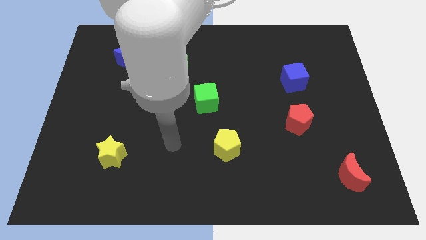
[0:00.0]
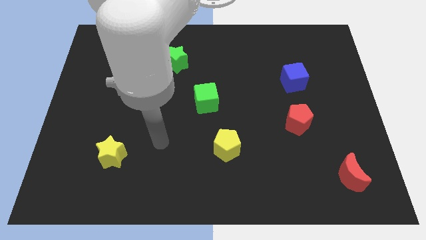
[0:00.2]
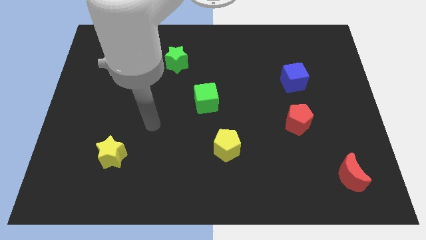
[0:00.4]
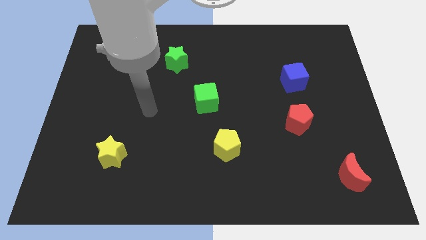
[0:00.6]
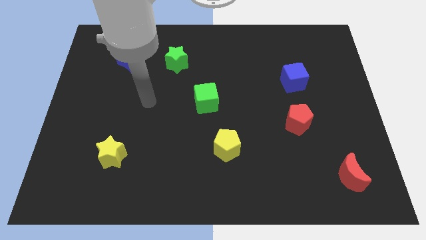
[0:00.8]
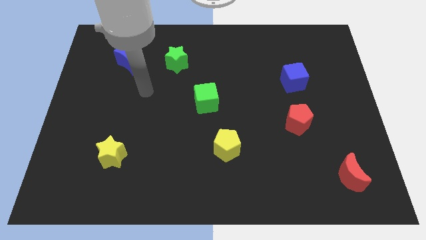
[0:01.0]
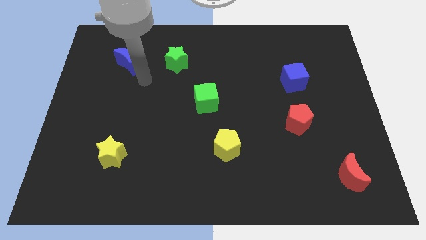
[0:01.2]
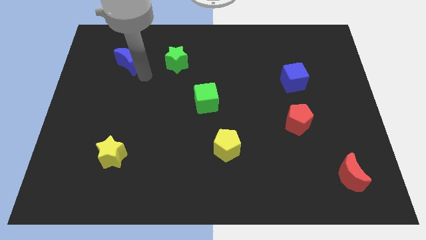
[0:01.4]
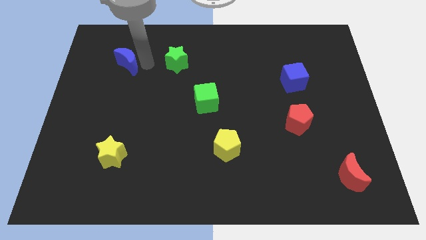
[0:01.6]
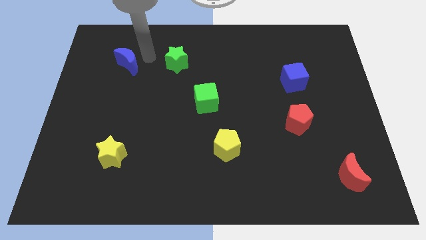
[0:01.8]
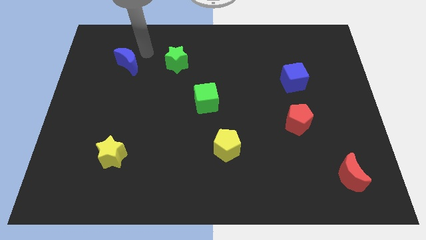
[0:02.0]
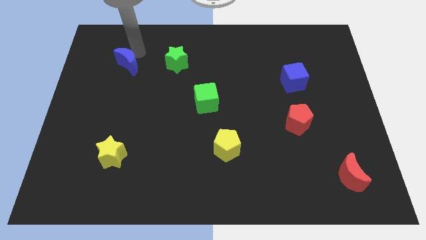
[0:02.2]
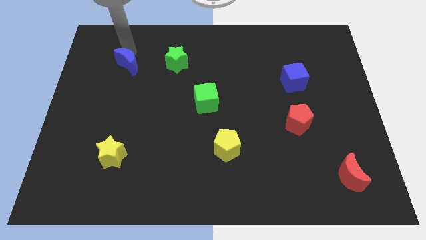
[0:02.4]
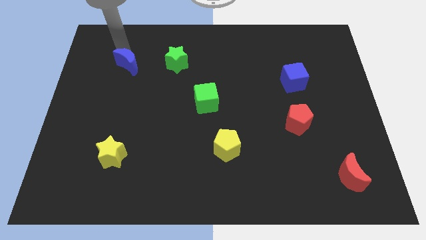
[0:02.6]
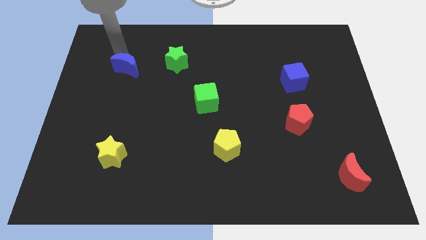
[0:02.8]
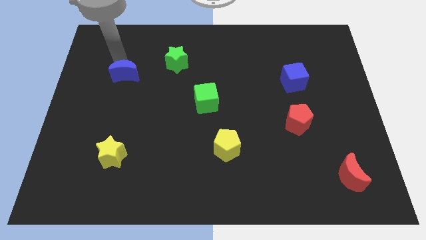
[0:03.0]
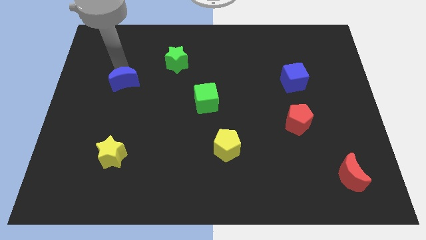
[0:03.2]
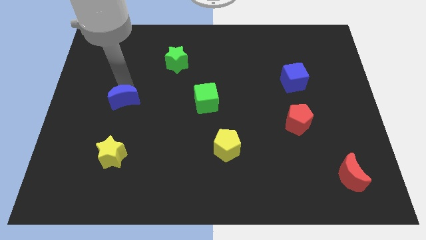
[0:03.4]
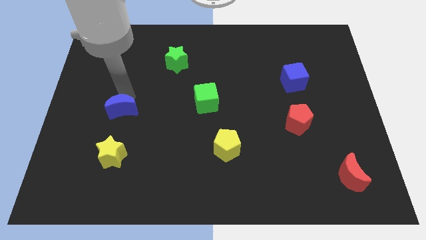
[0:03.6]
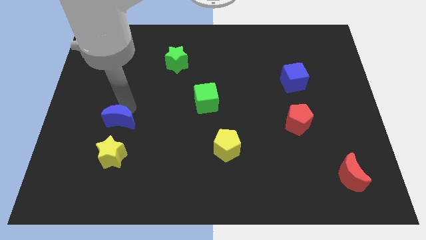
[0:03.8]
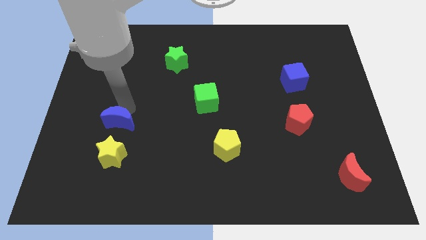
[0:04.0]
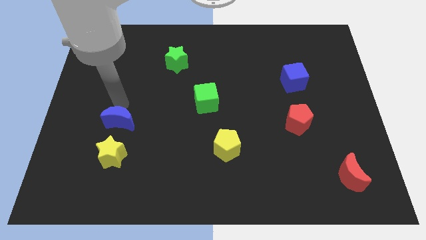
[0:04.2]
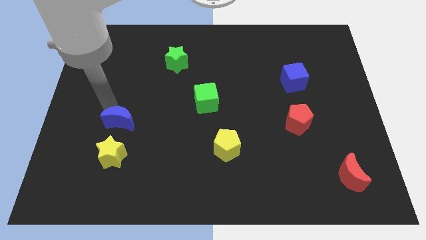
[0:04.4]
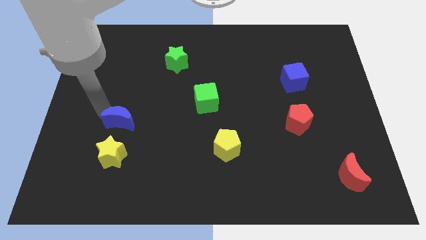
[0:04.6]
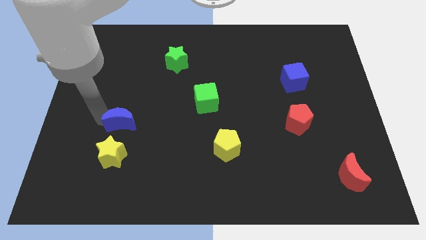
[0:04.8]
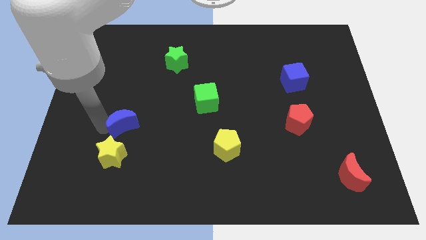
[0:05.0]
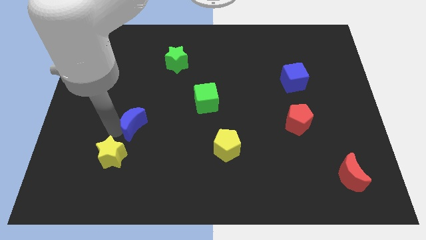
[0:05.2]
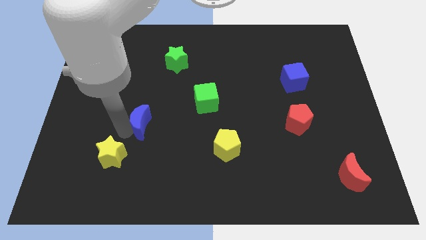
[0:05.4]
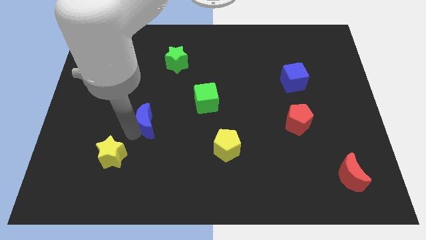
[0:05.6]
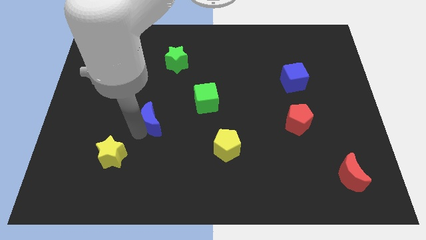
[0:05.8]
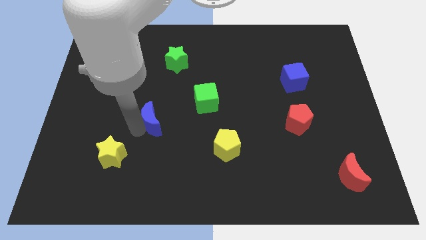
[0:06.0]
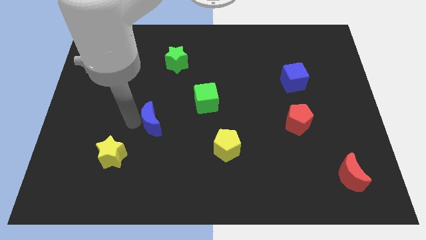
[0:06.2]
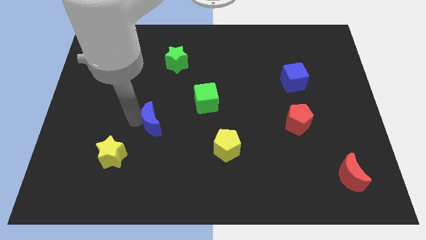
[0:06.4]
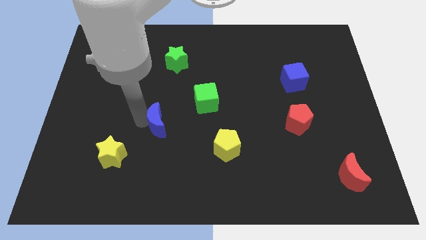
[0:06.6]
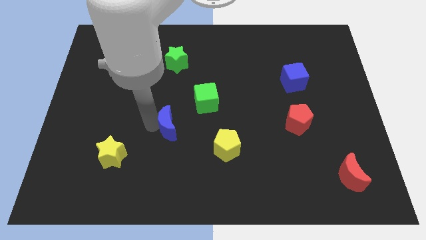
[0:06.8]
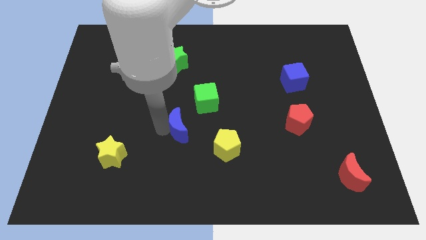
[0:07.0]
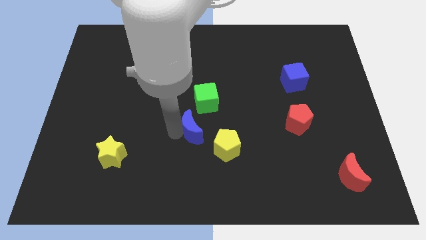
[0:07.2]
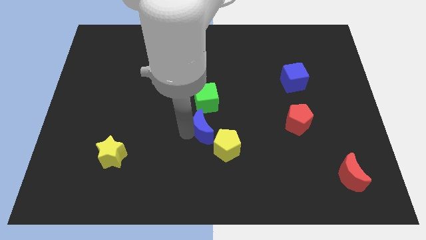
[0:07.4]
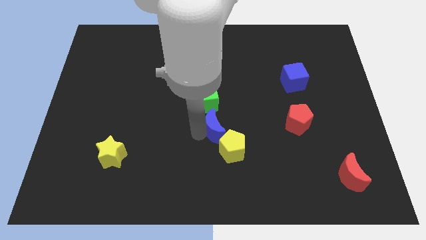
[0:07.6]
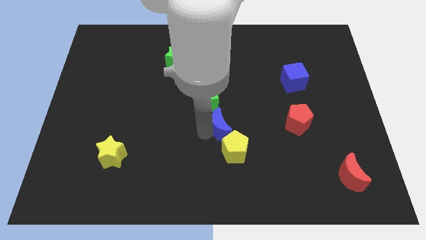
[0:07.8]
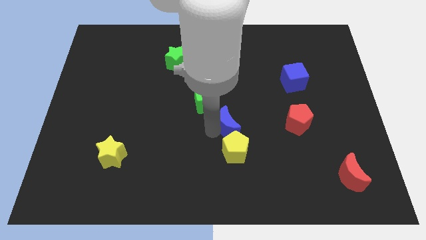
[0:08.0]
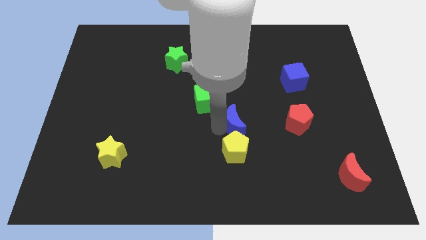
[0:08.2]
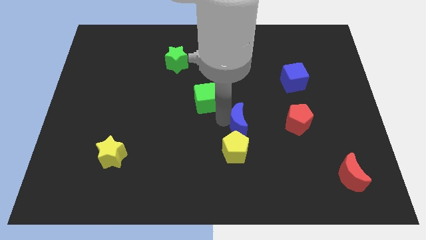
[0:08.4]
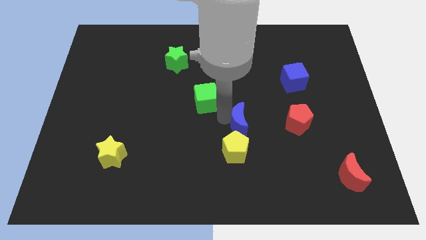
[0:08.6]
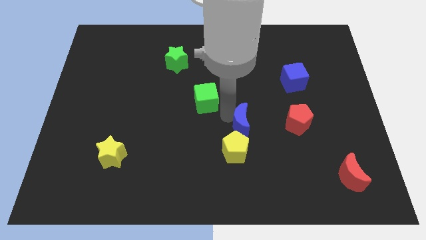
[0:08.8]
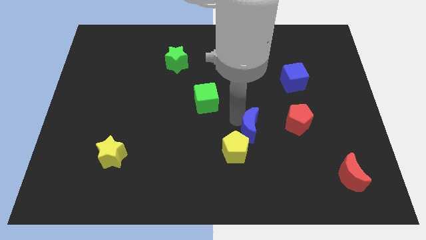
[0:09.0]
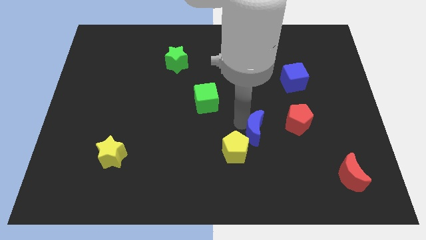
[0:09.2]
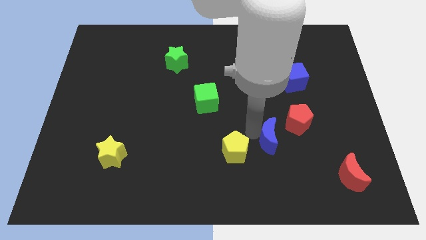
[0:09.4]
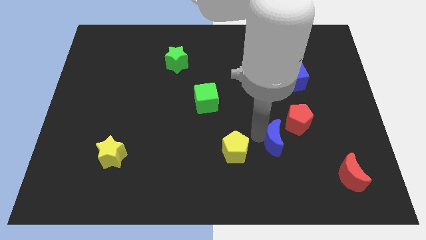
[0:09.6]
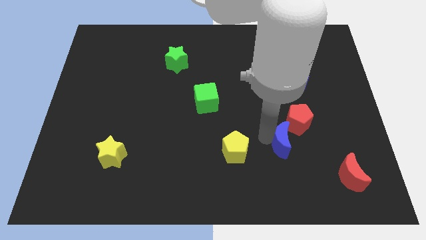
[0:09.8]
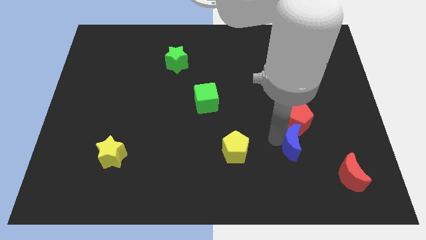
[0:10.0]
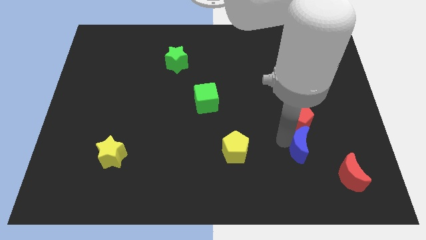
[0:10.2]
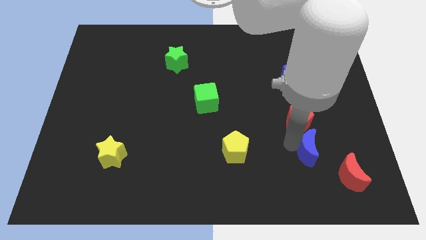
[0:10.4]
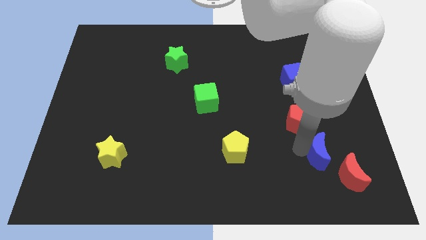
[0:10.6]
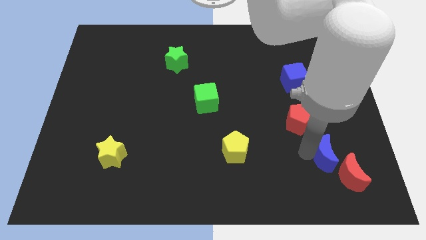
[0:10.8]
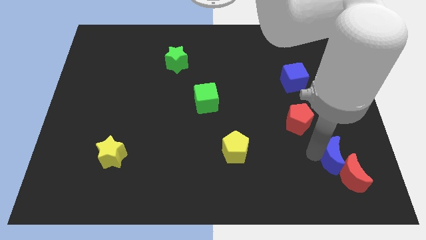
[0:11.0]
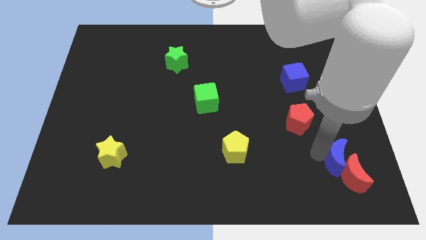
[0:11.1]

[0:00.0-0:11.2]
put the blue moon towards the red moon

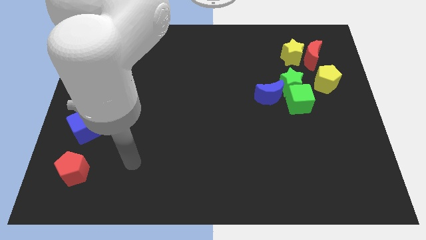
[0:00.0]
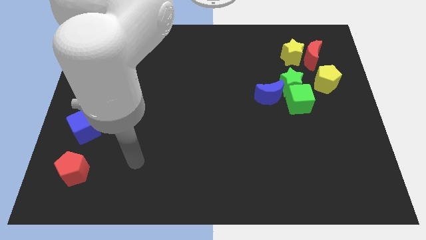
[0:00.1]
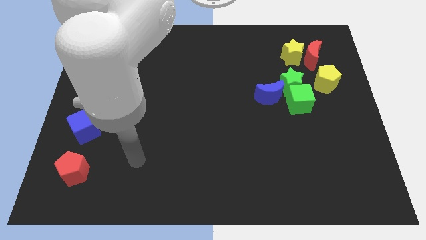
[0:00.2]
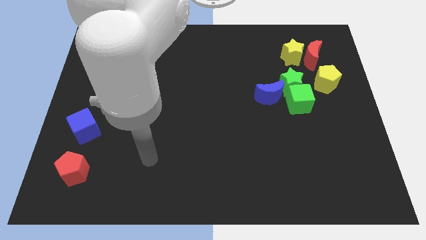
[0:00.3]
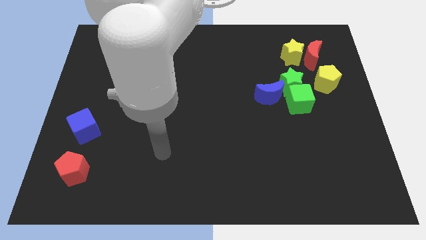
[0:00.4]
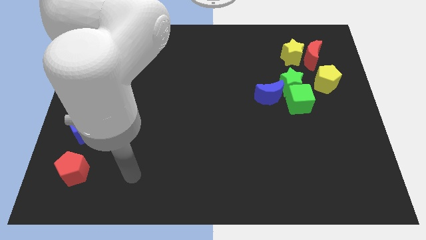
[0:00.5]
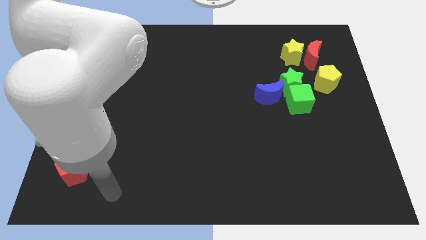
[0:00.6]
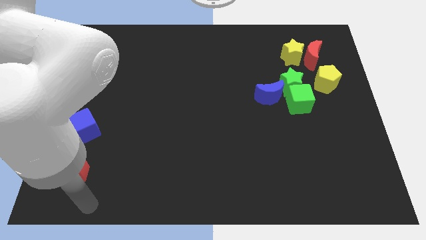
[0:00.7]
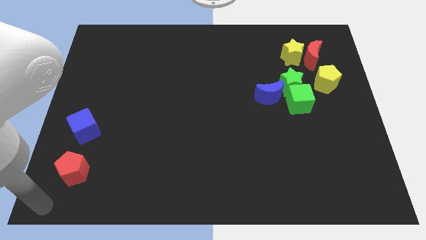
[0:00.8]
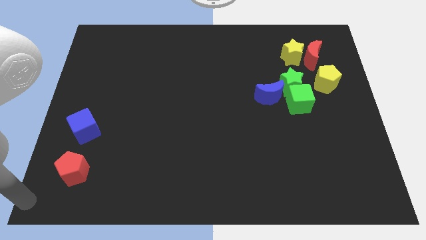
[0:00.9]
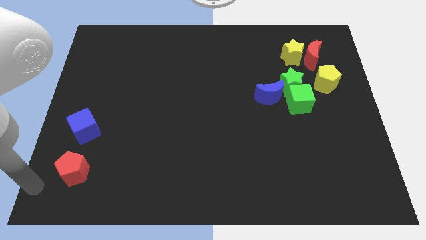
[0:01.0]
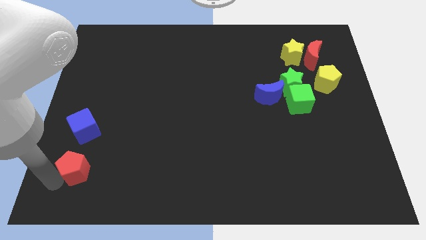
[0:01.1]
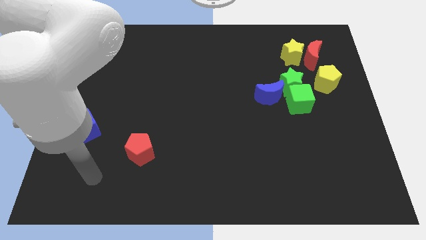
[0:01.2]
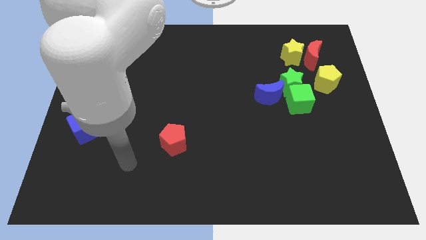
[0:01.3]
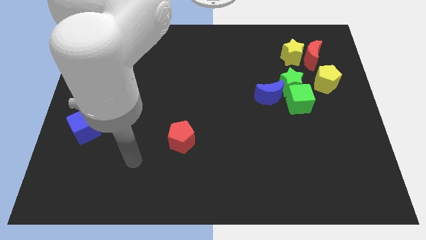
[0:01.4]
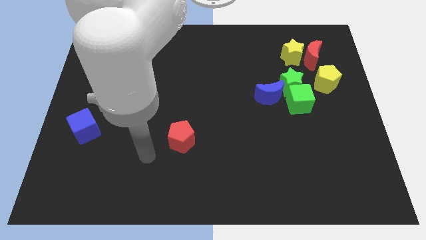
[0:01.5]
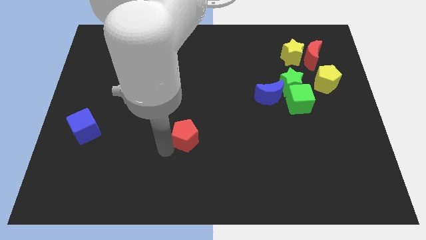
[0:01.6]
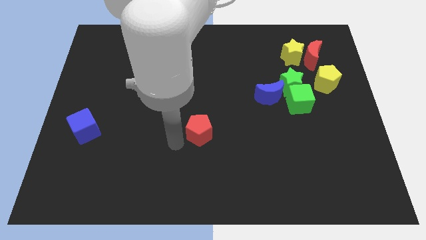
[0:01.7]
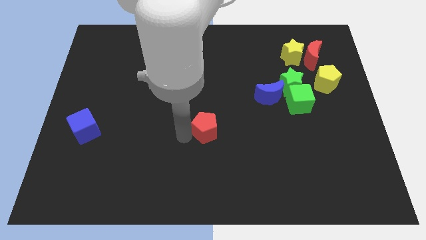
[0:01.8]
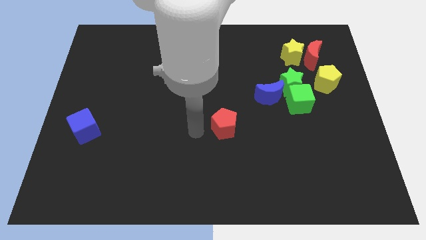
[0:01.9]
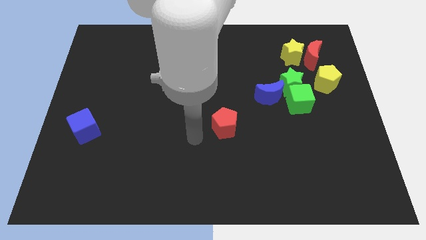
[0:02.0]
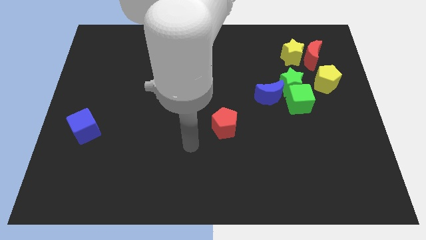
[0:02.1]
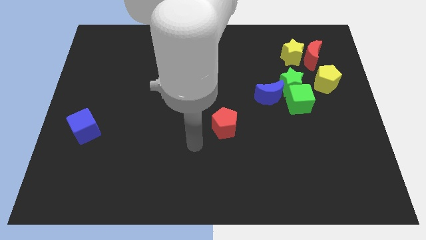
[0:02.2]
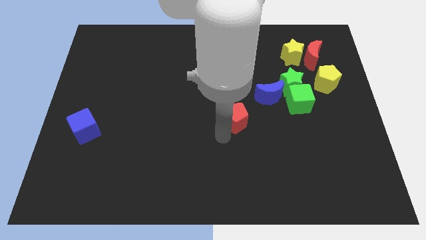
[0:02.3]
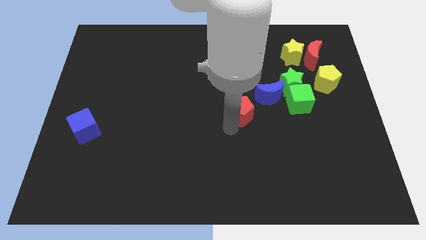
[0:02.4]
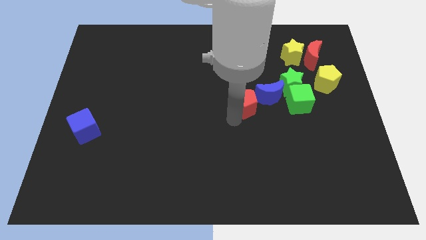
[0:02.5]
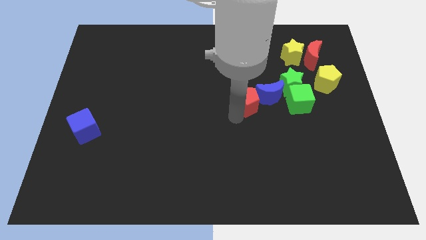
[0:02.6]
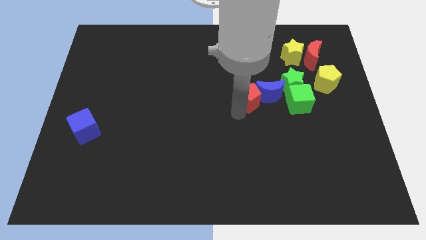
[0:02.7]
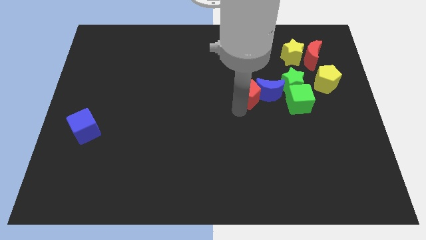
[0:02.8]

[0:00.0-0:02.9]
slide the red pentagon next to the blue moon

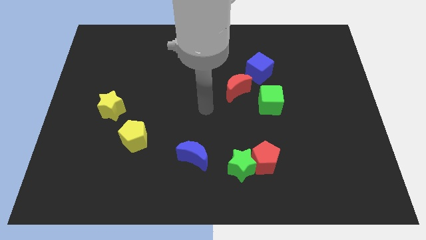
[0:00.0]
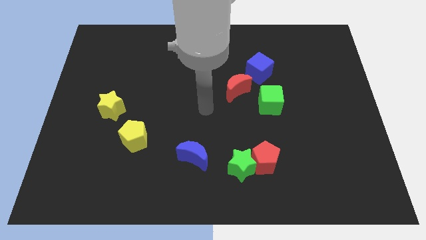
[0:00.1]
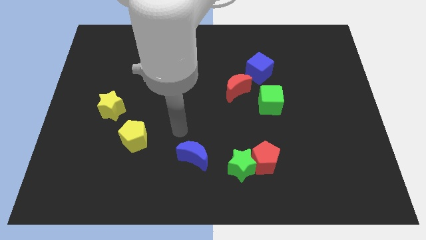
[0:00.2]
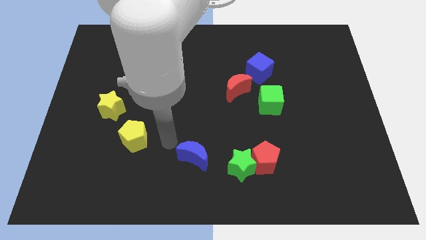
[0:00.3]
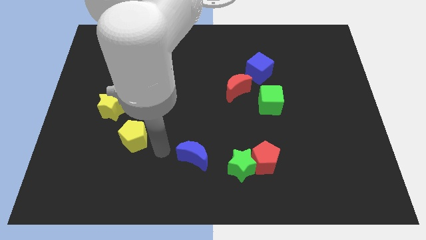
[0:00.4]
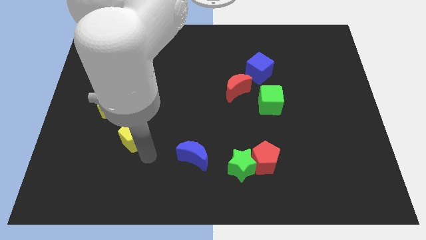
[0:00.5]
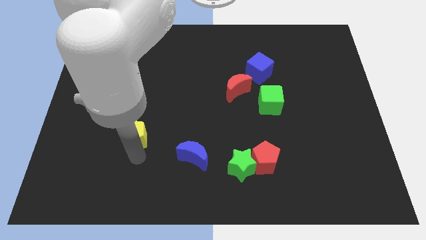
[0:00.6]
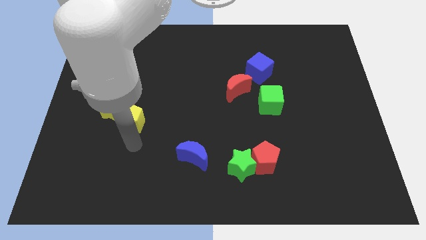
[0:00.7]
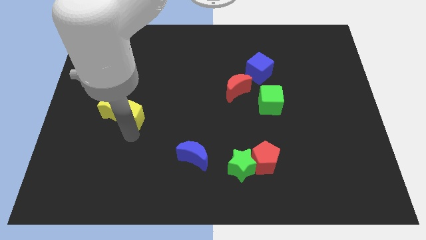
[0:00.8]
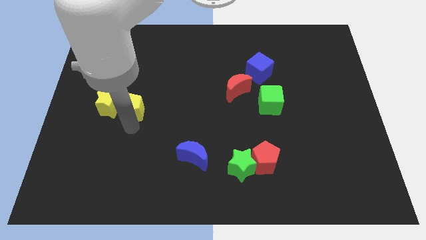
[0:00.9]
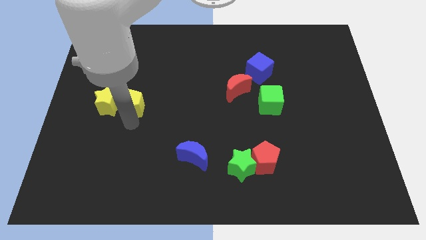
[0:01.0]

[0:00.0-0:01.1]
slide the yellow pentagon close to the yellow star
